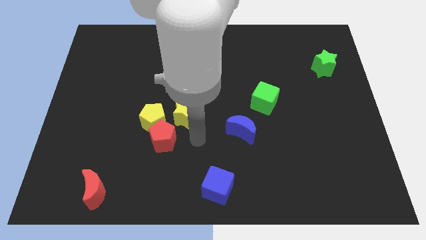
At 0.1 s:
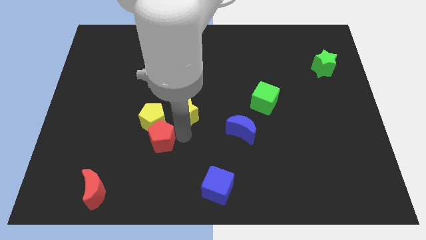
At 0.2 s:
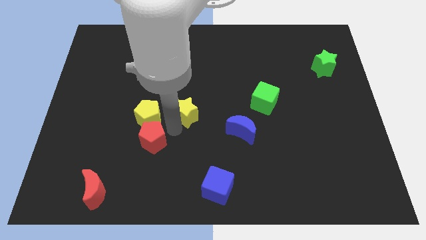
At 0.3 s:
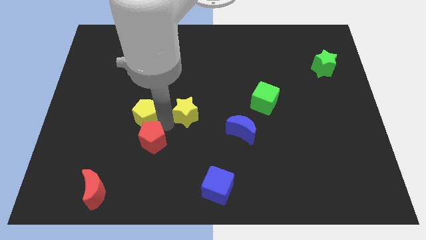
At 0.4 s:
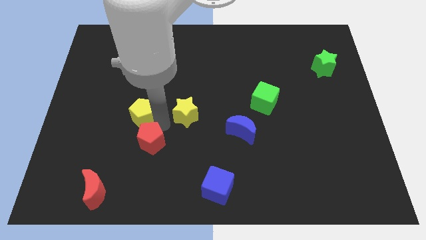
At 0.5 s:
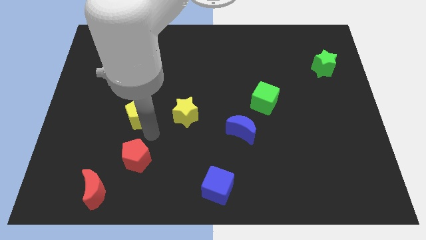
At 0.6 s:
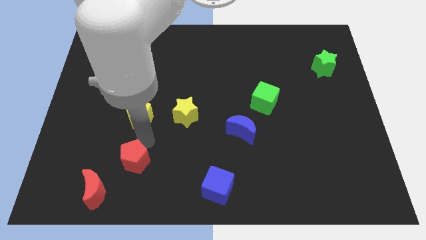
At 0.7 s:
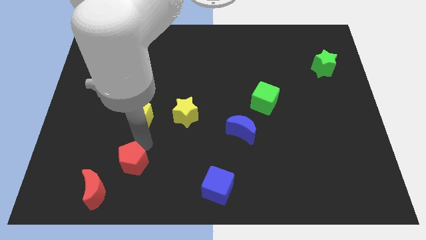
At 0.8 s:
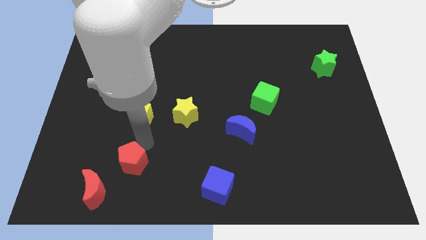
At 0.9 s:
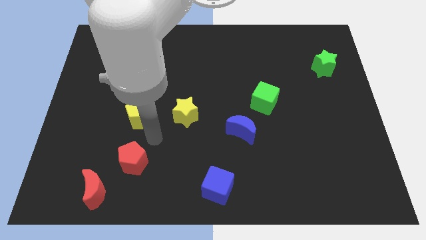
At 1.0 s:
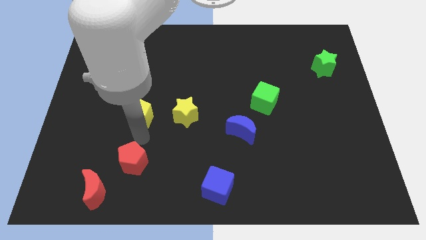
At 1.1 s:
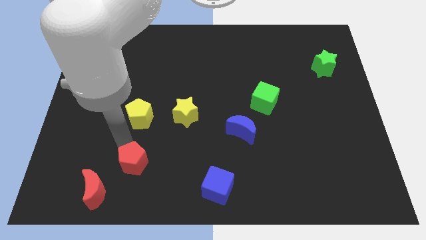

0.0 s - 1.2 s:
move the red pentagon back of the yellow pentagon

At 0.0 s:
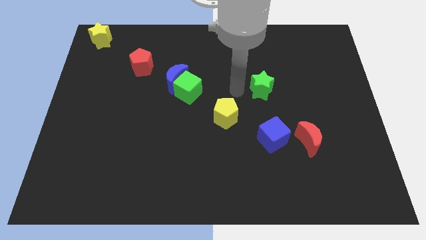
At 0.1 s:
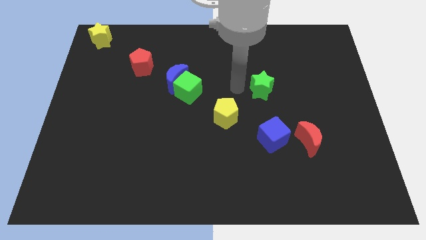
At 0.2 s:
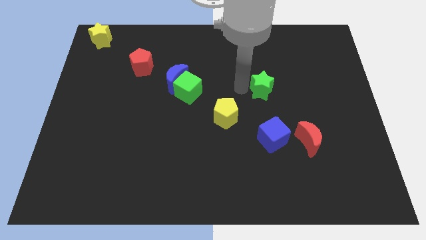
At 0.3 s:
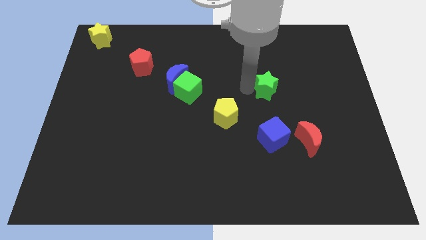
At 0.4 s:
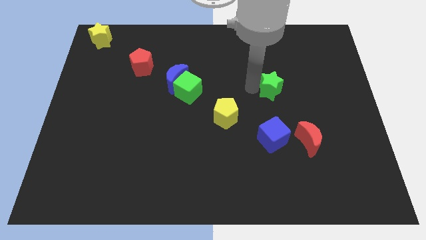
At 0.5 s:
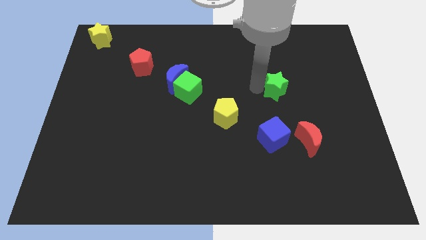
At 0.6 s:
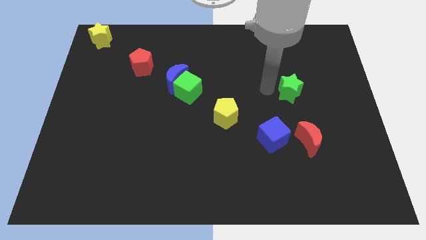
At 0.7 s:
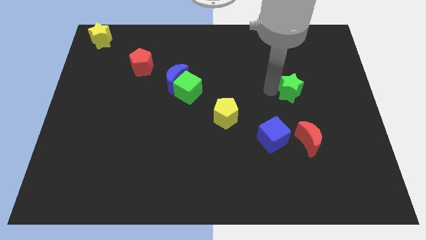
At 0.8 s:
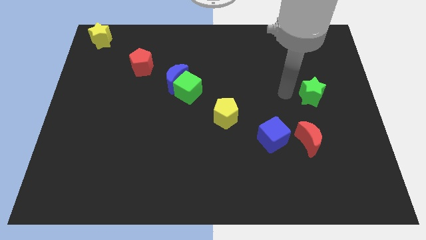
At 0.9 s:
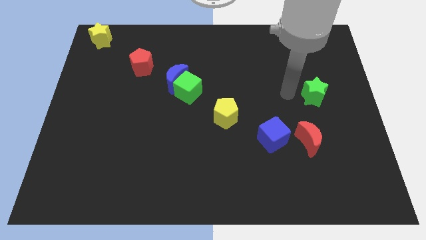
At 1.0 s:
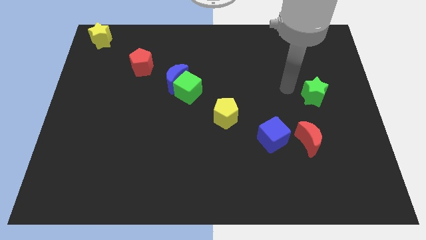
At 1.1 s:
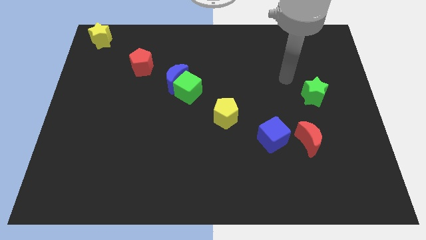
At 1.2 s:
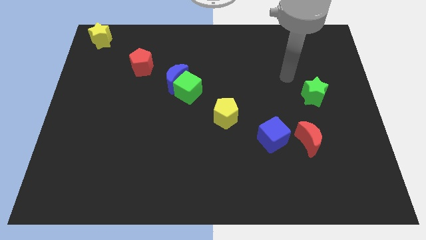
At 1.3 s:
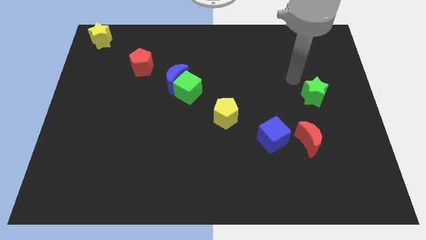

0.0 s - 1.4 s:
place the green star above the red moon

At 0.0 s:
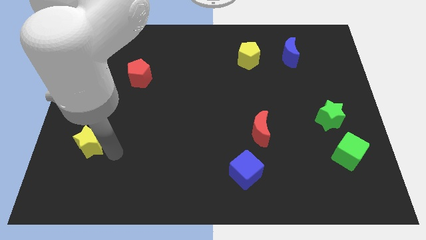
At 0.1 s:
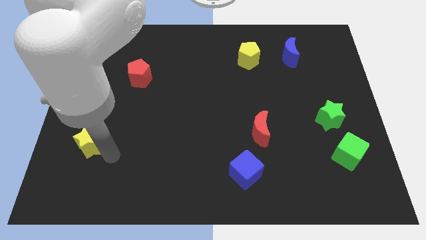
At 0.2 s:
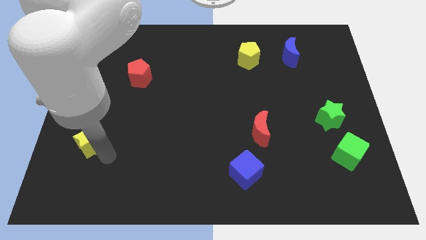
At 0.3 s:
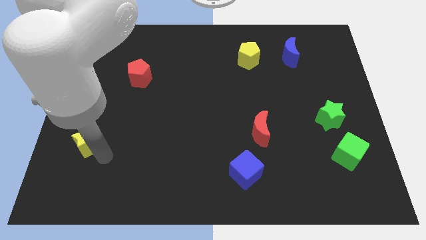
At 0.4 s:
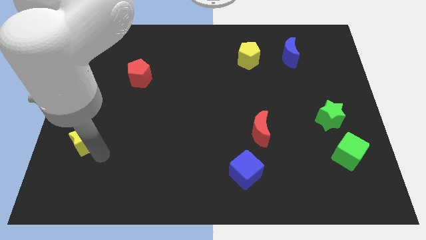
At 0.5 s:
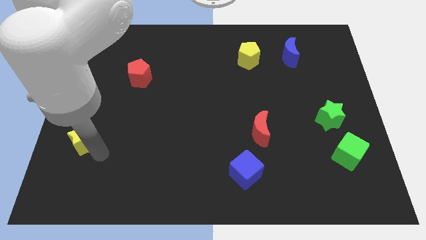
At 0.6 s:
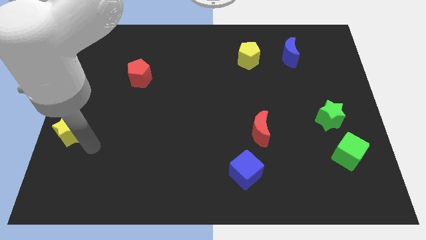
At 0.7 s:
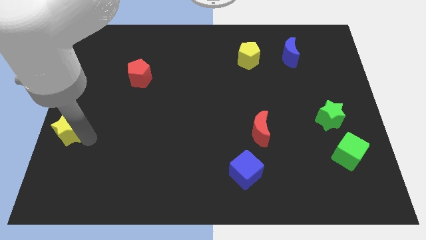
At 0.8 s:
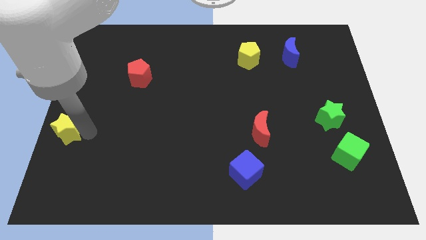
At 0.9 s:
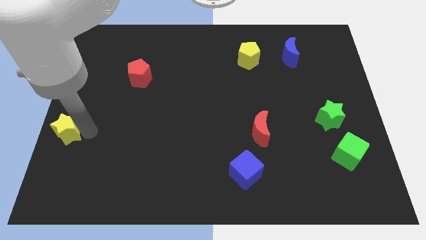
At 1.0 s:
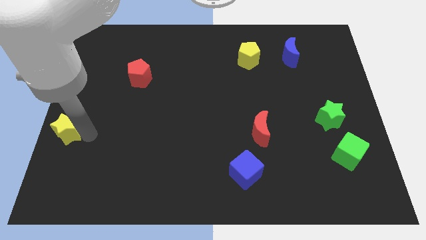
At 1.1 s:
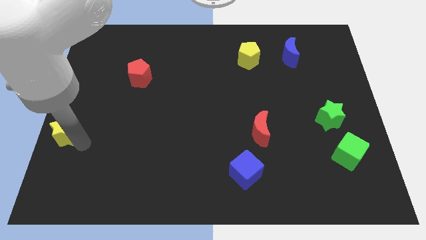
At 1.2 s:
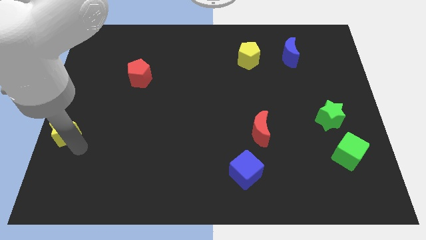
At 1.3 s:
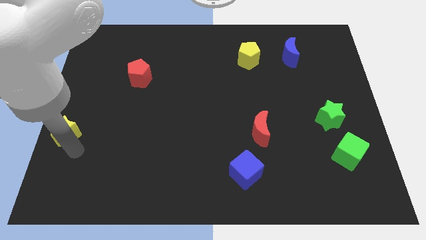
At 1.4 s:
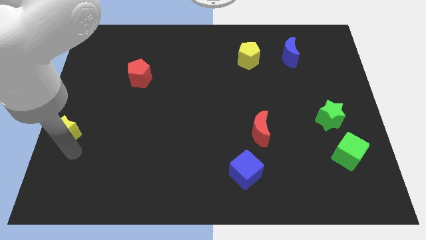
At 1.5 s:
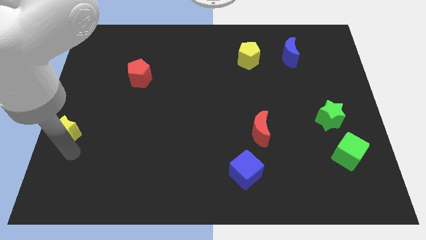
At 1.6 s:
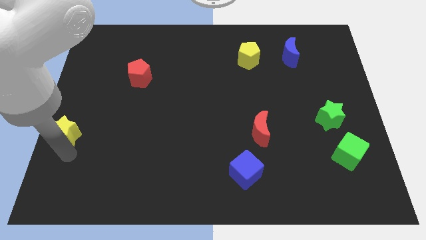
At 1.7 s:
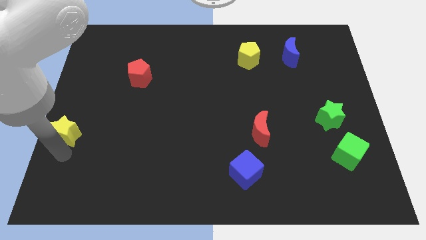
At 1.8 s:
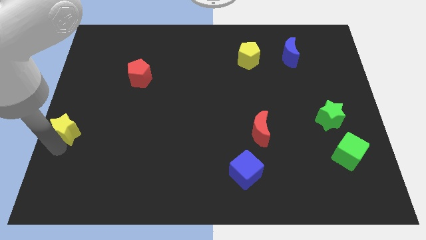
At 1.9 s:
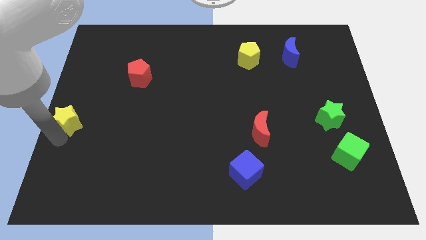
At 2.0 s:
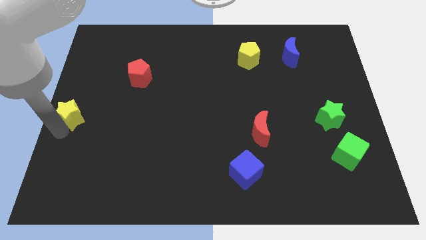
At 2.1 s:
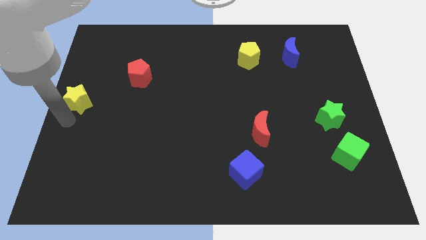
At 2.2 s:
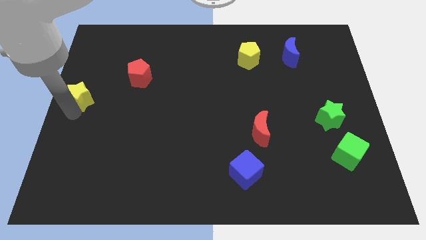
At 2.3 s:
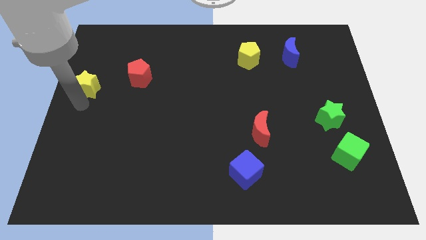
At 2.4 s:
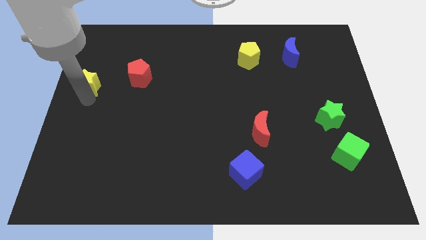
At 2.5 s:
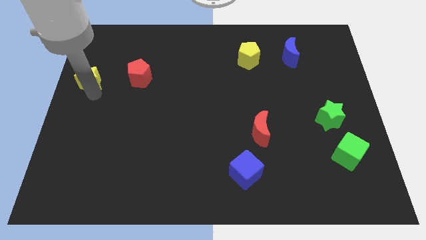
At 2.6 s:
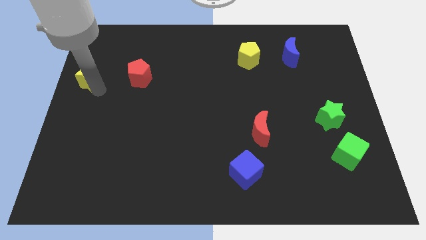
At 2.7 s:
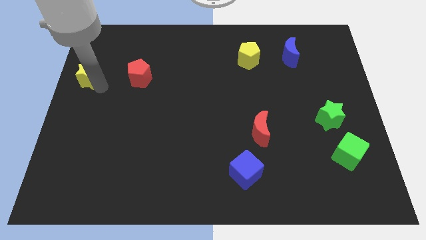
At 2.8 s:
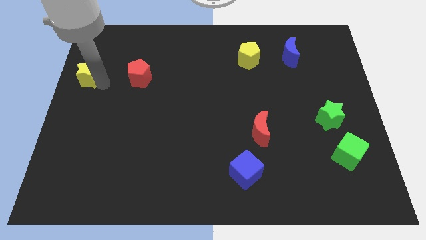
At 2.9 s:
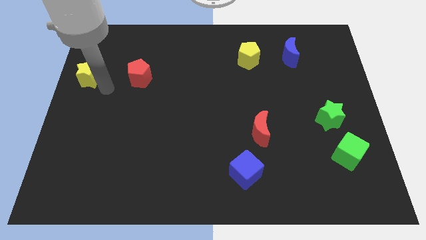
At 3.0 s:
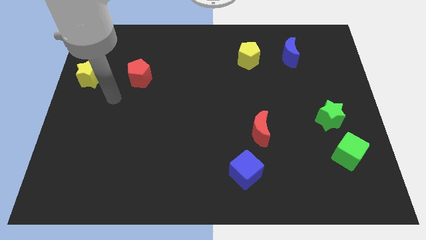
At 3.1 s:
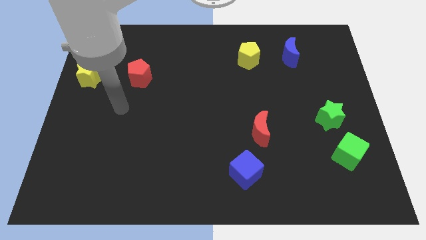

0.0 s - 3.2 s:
push the yellow star towards the top side of the board

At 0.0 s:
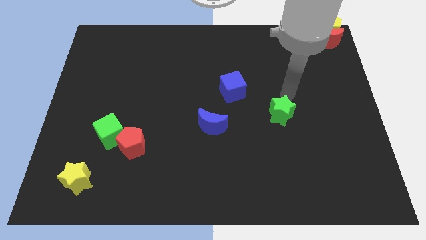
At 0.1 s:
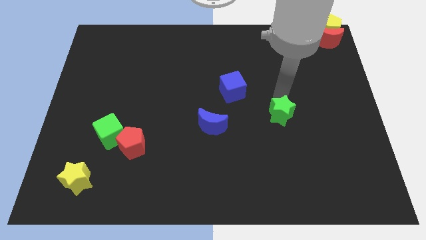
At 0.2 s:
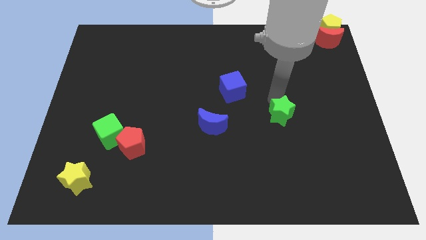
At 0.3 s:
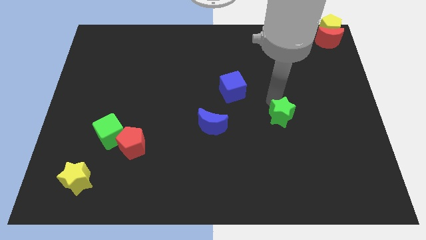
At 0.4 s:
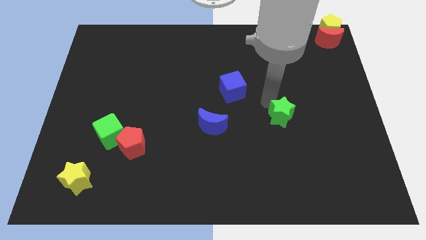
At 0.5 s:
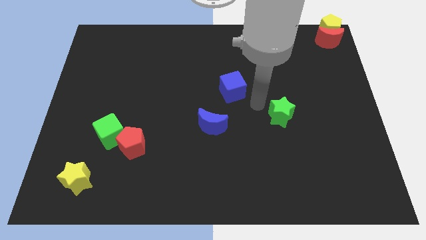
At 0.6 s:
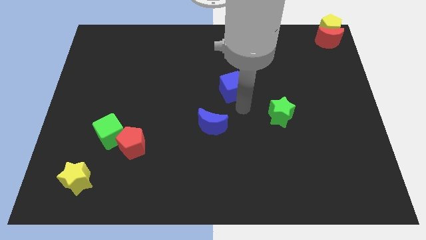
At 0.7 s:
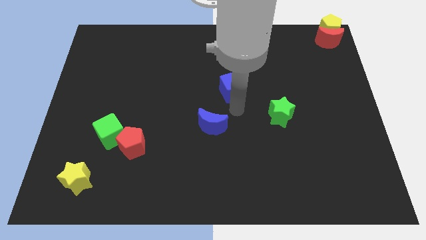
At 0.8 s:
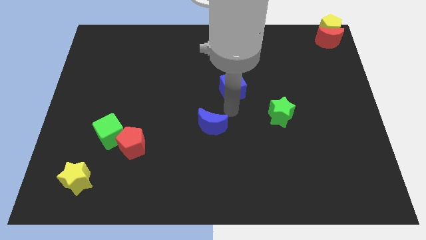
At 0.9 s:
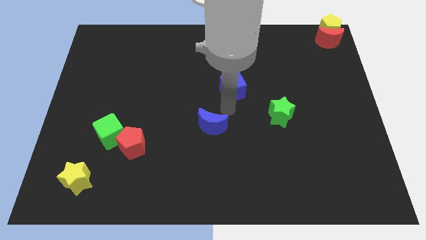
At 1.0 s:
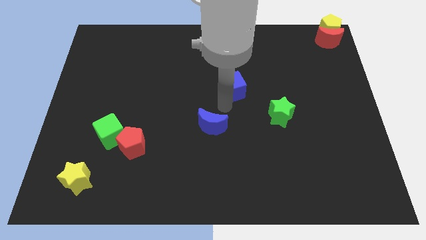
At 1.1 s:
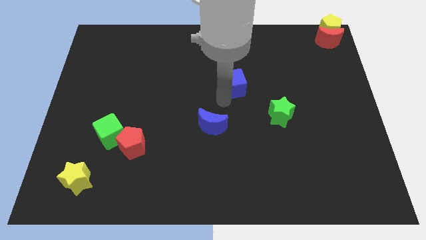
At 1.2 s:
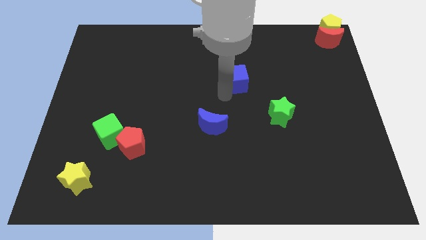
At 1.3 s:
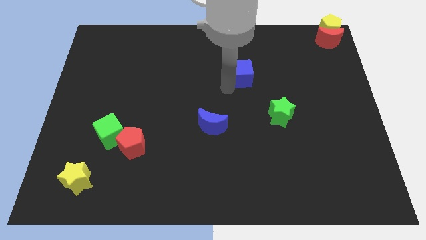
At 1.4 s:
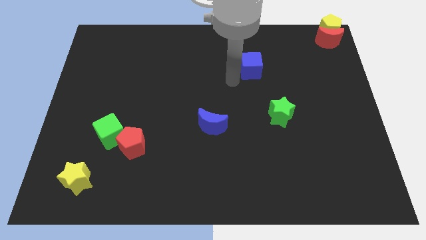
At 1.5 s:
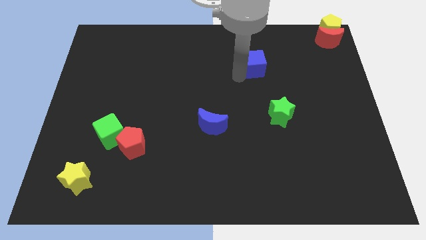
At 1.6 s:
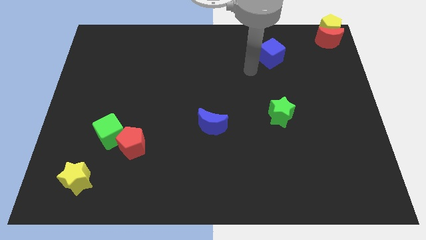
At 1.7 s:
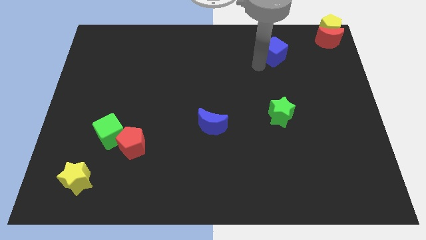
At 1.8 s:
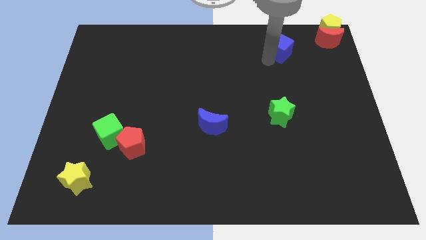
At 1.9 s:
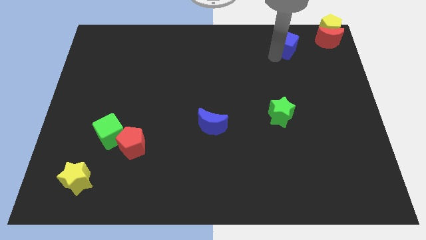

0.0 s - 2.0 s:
drag the blue cube vertically above the green star

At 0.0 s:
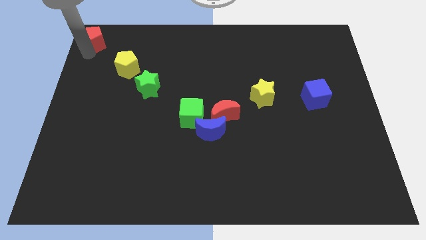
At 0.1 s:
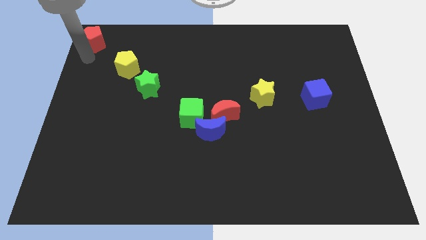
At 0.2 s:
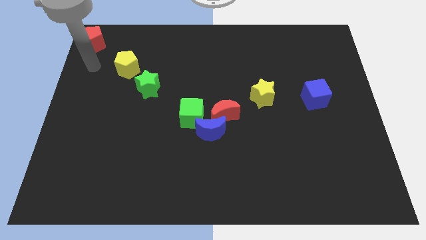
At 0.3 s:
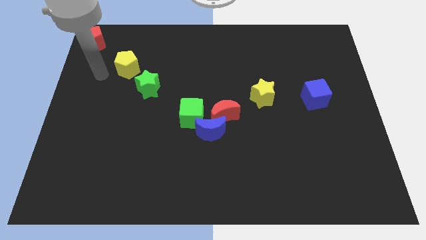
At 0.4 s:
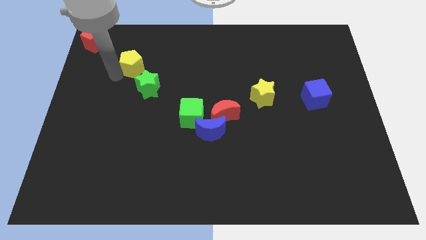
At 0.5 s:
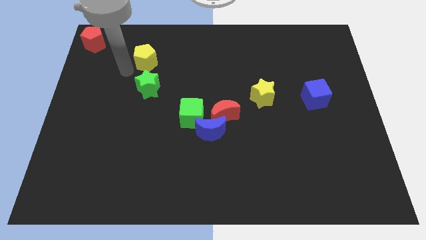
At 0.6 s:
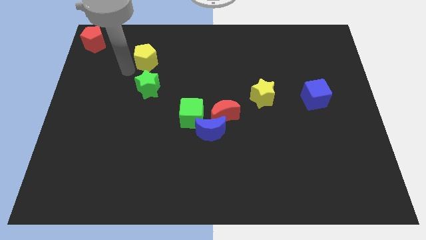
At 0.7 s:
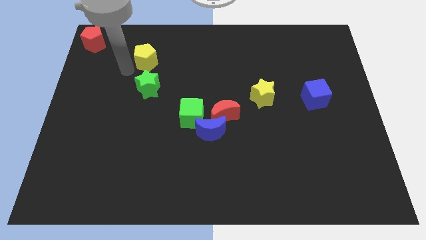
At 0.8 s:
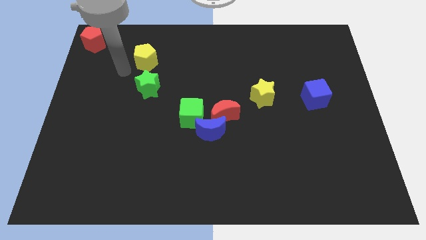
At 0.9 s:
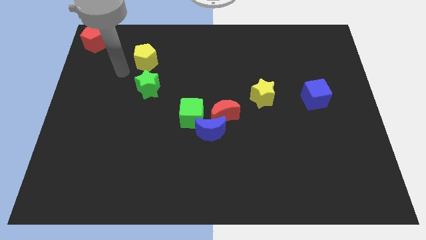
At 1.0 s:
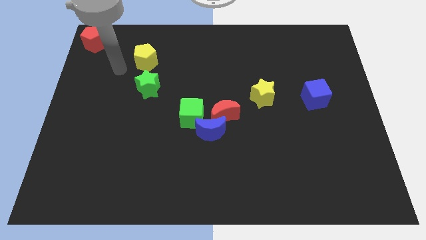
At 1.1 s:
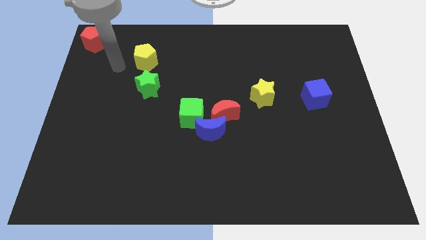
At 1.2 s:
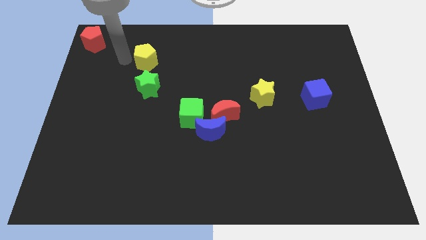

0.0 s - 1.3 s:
slightly move the yellow pentagon to the right
